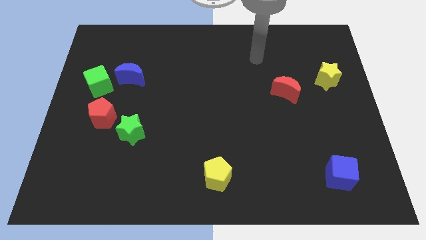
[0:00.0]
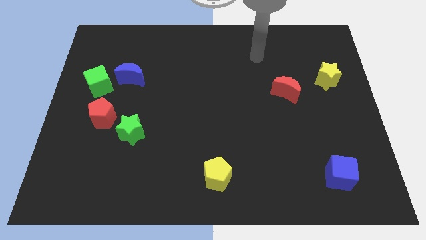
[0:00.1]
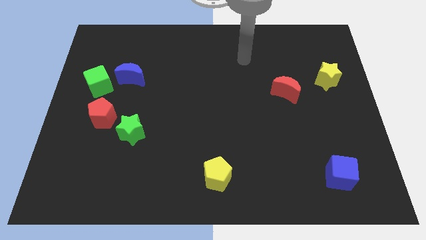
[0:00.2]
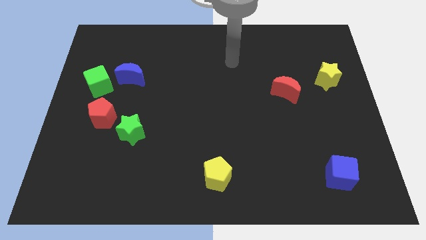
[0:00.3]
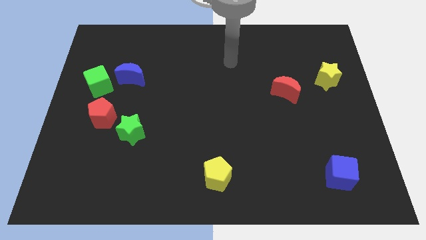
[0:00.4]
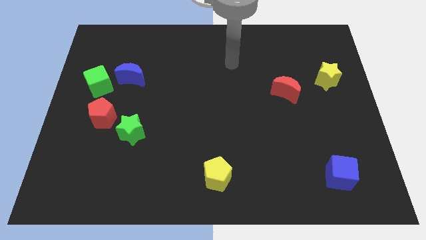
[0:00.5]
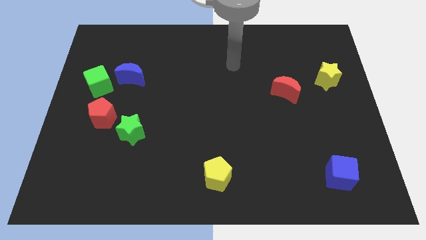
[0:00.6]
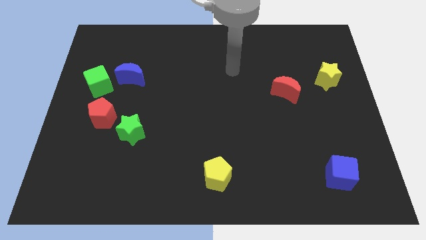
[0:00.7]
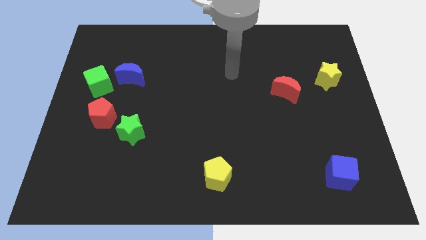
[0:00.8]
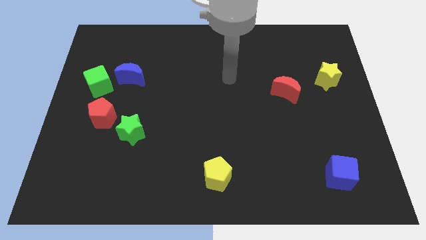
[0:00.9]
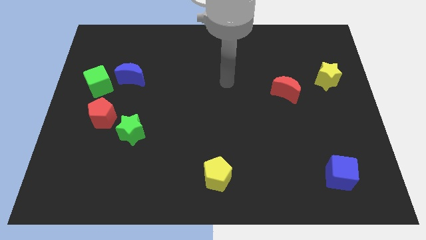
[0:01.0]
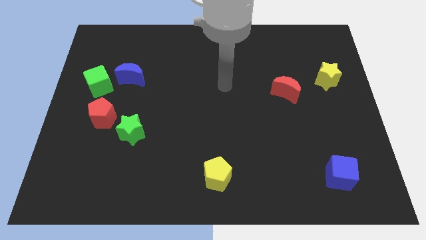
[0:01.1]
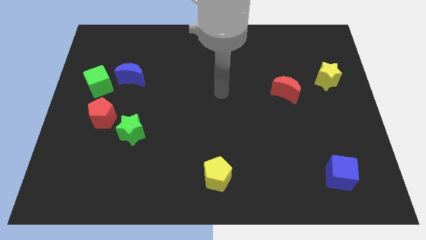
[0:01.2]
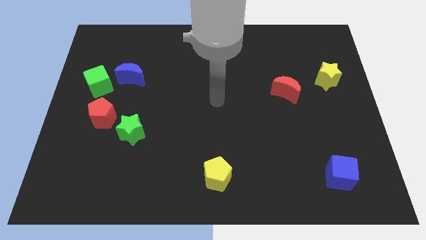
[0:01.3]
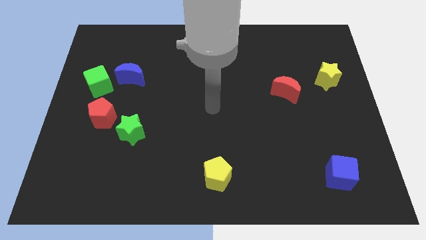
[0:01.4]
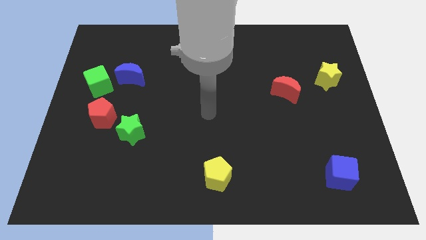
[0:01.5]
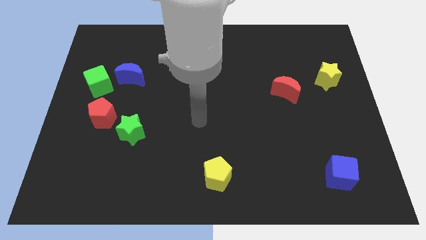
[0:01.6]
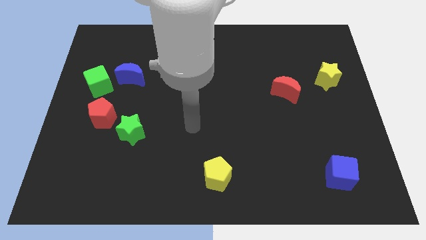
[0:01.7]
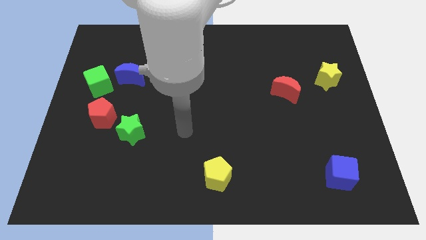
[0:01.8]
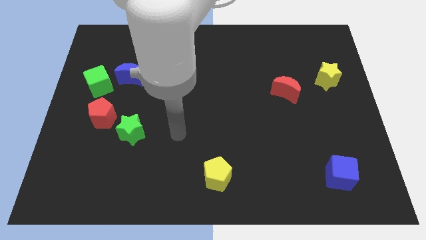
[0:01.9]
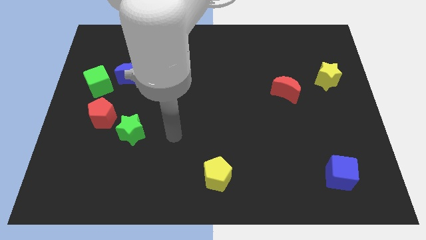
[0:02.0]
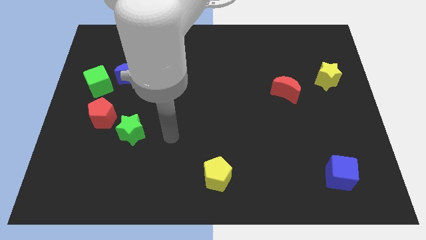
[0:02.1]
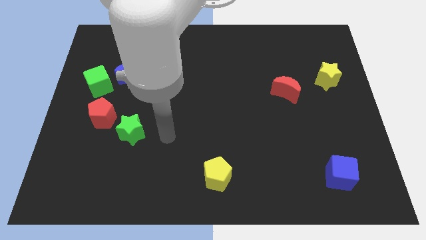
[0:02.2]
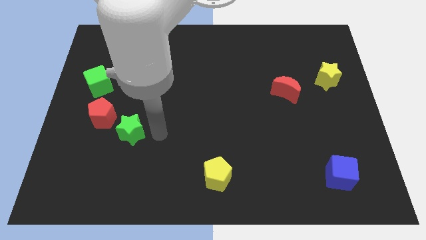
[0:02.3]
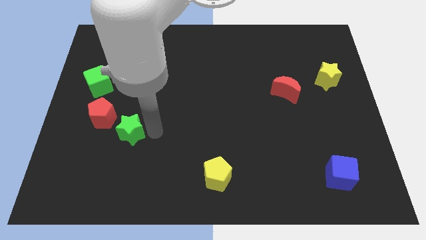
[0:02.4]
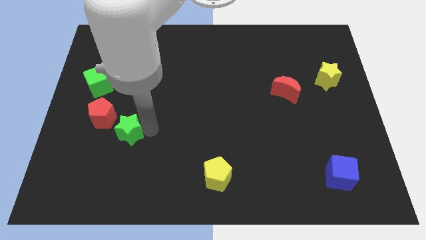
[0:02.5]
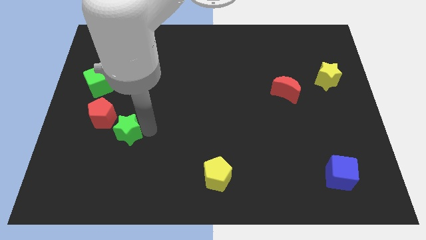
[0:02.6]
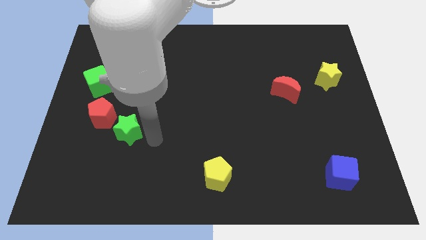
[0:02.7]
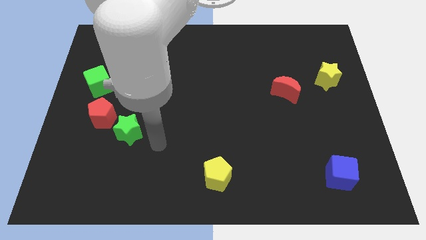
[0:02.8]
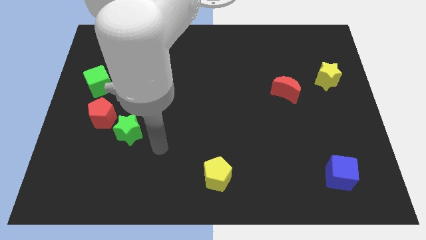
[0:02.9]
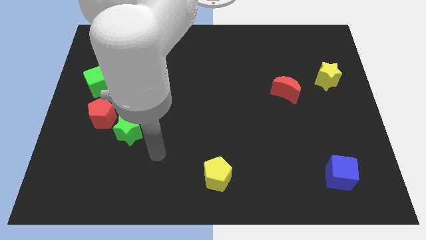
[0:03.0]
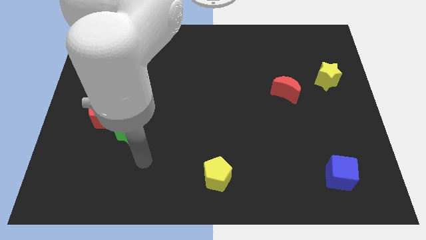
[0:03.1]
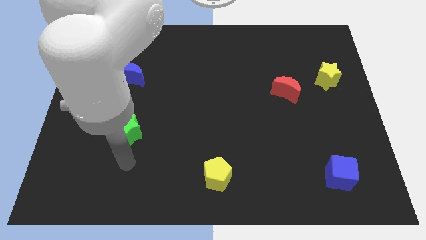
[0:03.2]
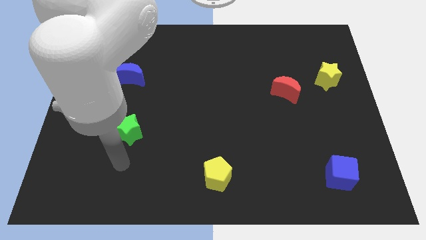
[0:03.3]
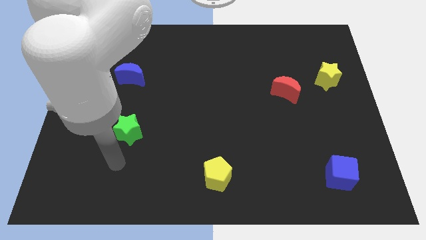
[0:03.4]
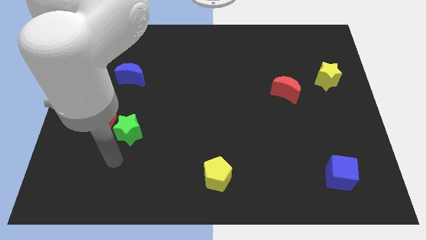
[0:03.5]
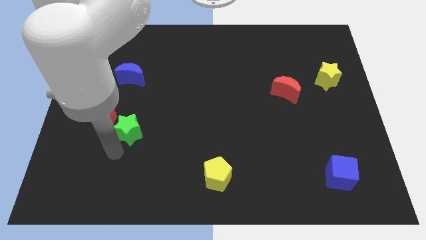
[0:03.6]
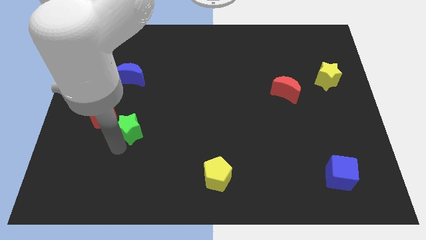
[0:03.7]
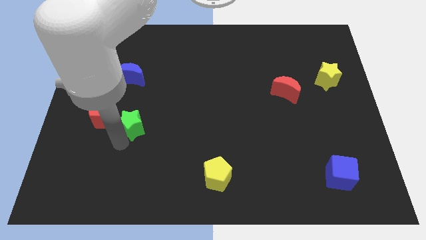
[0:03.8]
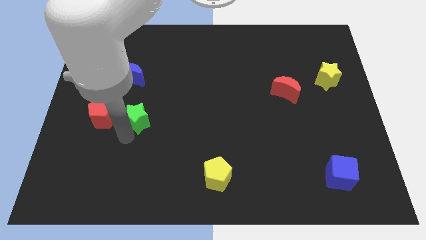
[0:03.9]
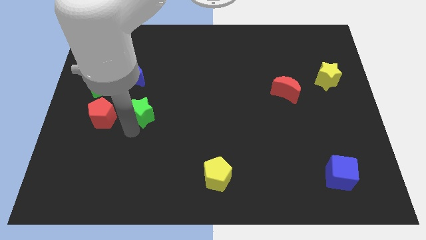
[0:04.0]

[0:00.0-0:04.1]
push the green star to the right of the red pentagon

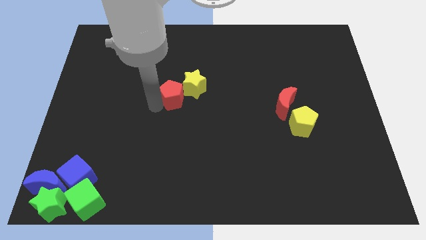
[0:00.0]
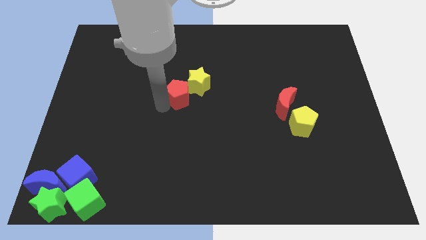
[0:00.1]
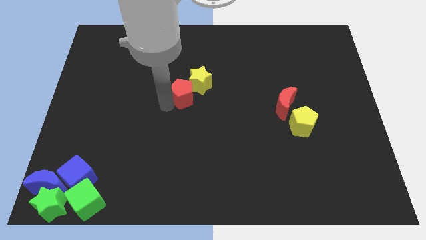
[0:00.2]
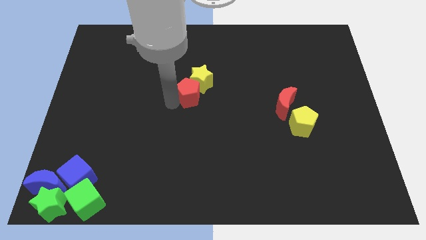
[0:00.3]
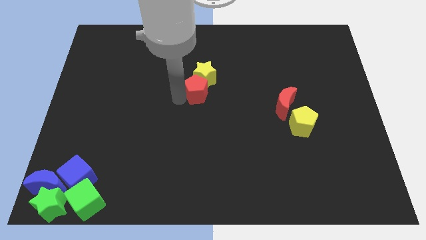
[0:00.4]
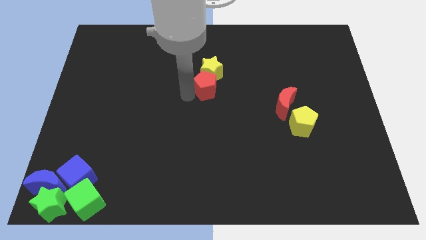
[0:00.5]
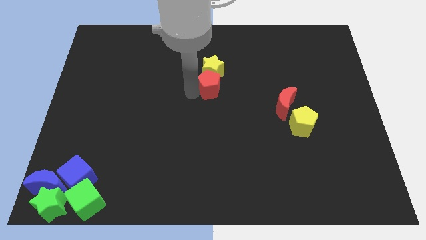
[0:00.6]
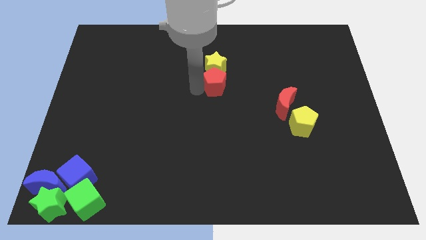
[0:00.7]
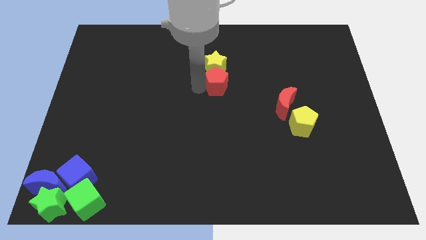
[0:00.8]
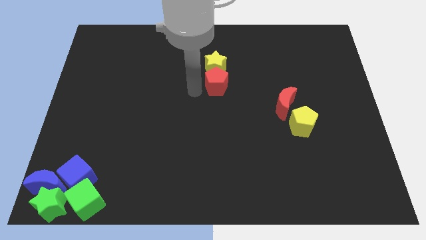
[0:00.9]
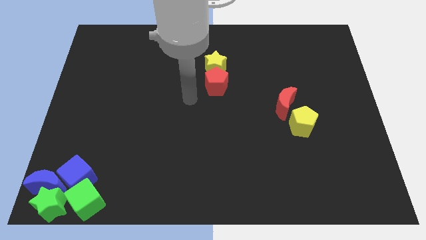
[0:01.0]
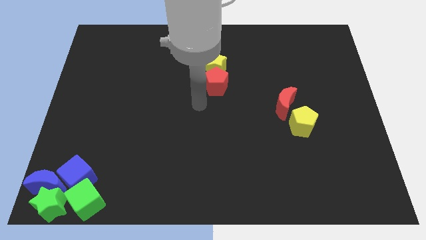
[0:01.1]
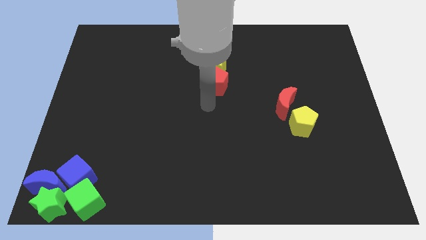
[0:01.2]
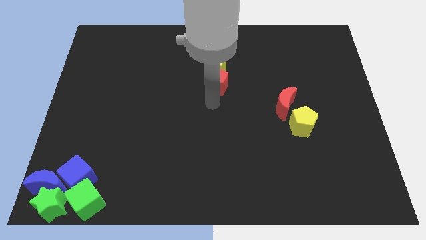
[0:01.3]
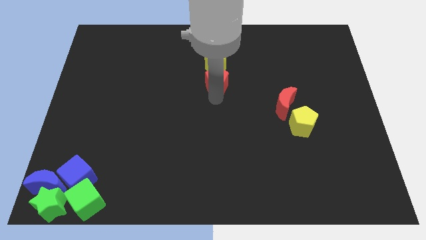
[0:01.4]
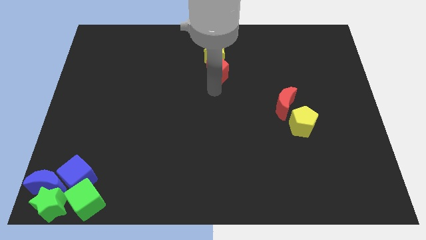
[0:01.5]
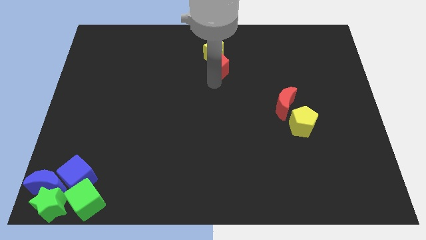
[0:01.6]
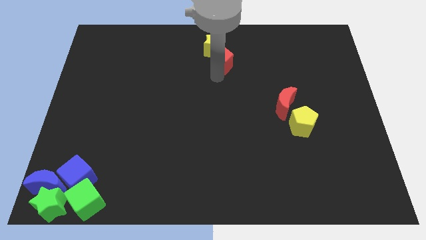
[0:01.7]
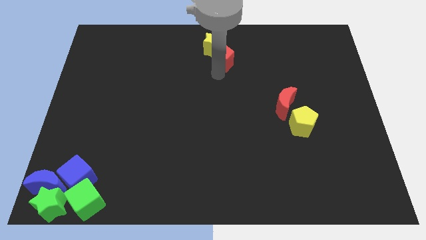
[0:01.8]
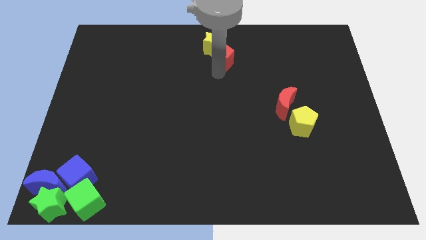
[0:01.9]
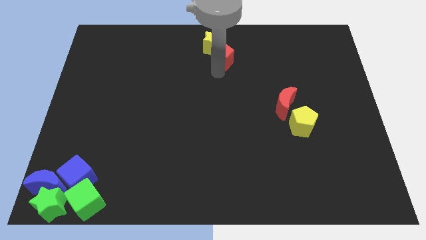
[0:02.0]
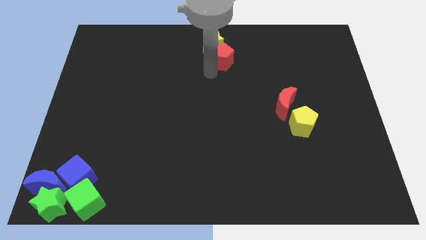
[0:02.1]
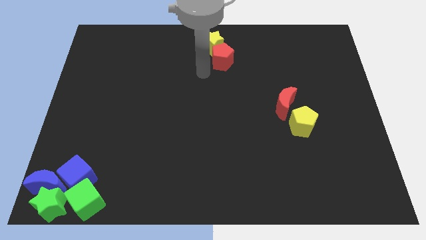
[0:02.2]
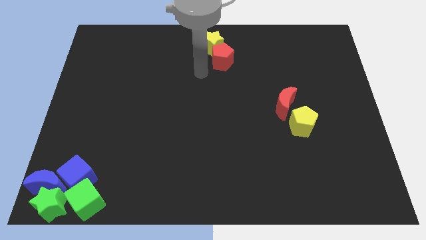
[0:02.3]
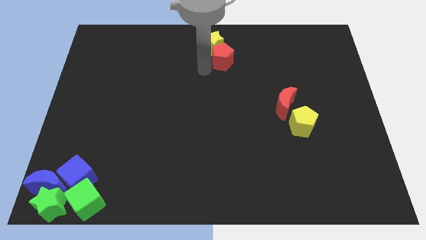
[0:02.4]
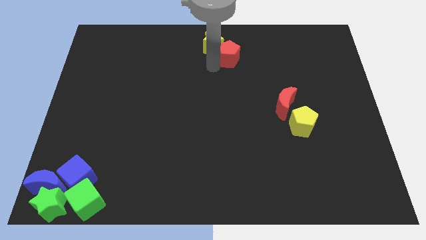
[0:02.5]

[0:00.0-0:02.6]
move the yellow pentagon and red pentagon to the top middle

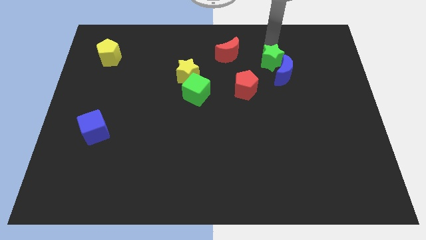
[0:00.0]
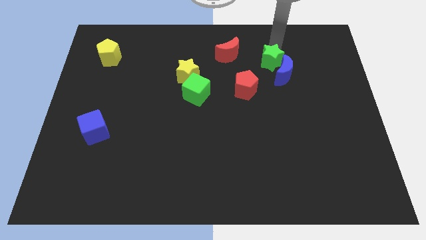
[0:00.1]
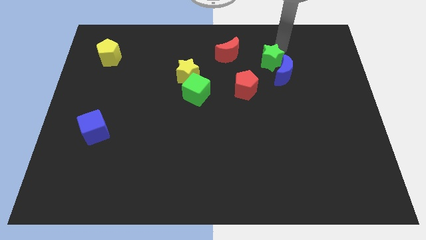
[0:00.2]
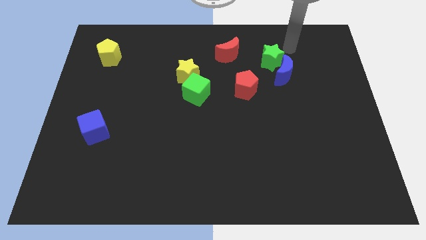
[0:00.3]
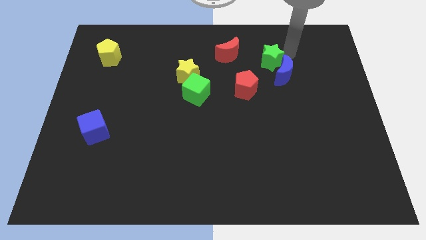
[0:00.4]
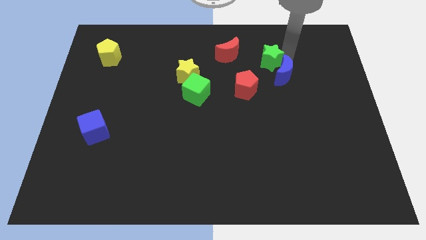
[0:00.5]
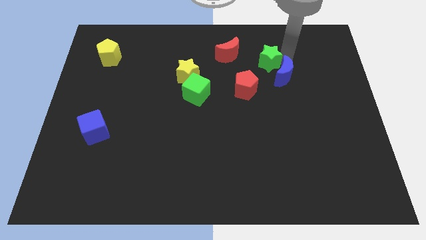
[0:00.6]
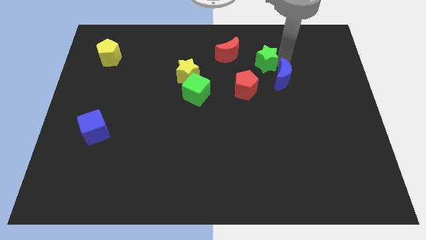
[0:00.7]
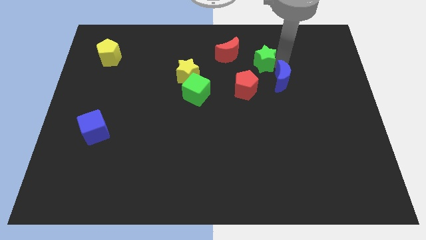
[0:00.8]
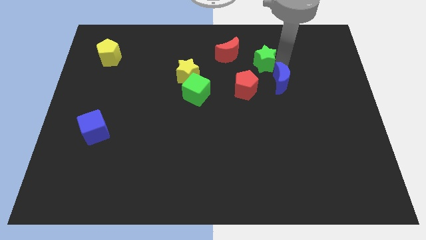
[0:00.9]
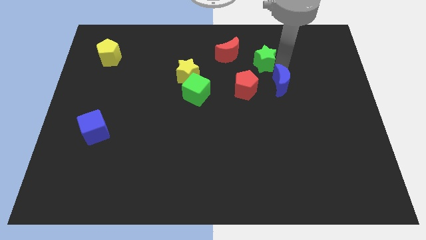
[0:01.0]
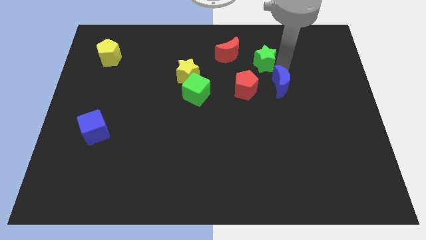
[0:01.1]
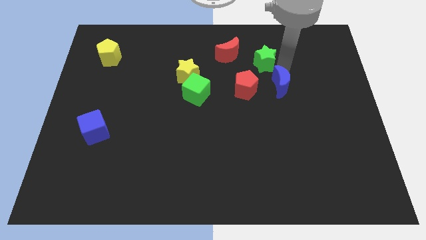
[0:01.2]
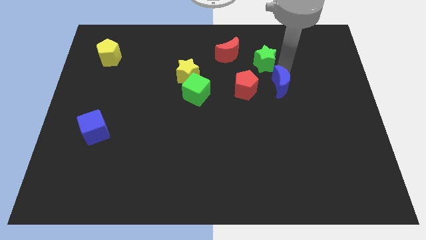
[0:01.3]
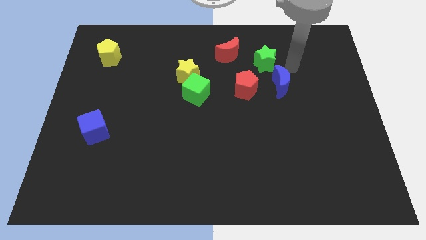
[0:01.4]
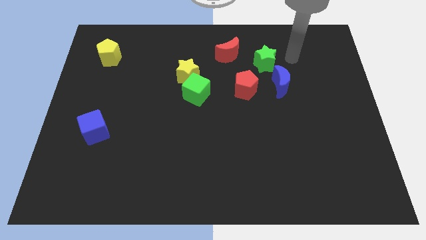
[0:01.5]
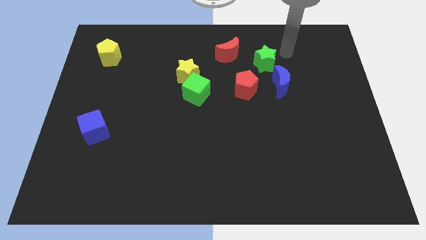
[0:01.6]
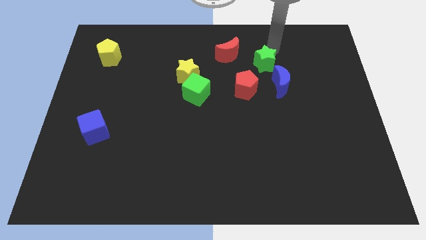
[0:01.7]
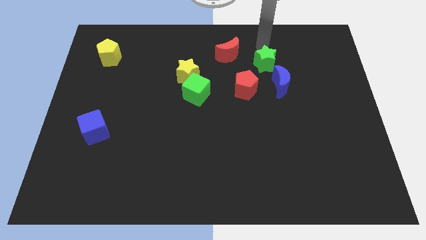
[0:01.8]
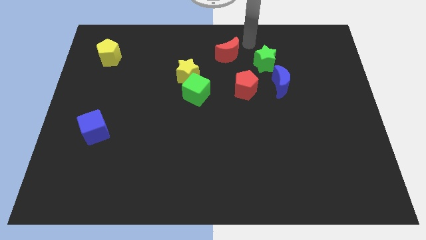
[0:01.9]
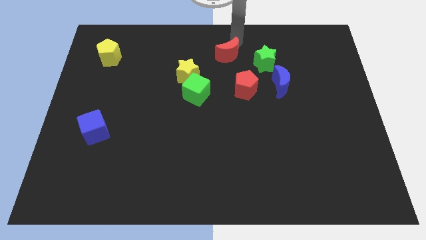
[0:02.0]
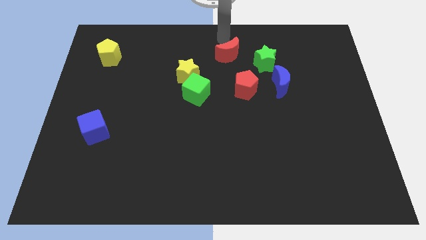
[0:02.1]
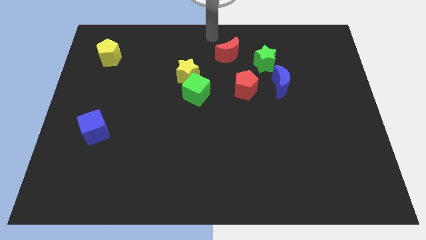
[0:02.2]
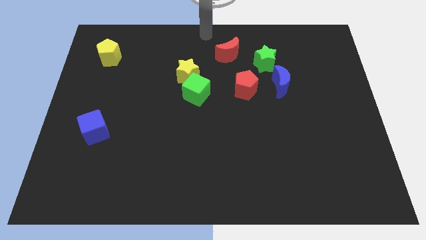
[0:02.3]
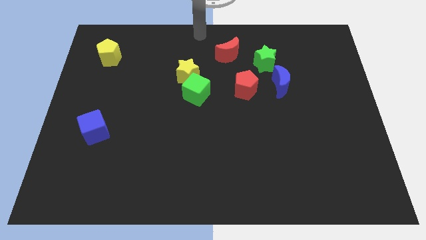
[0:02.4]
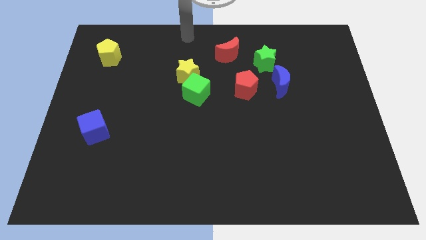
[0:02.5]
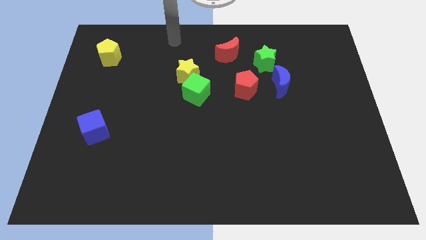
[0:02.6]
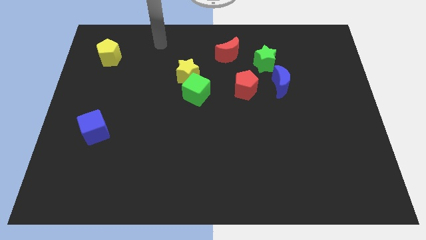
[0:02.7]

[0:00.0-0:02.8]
separate the green star and blue moon and move away
